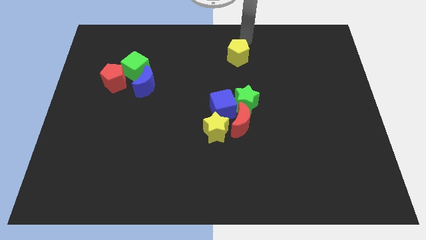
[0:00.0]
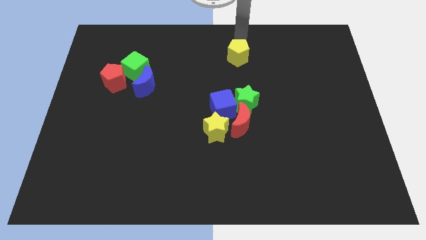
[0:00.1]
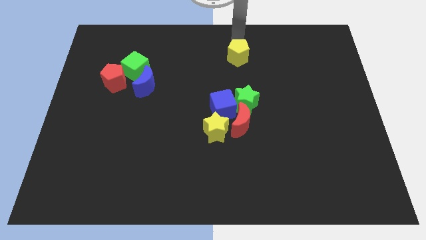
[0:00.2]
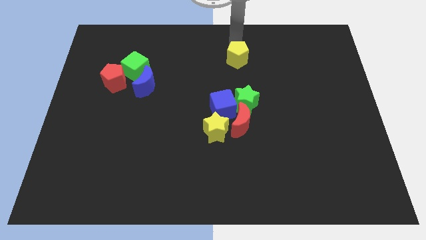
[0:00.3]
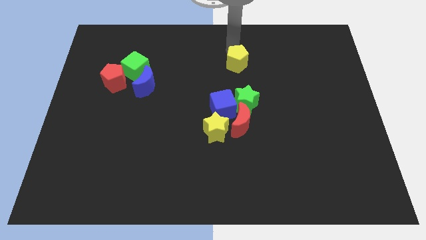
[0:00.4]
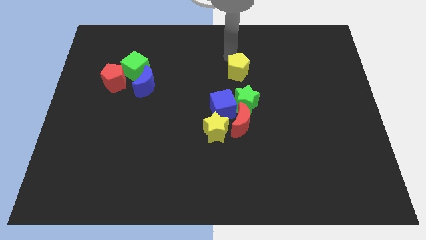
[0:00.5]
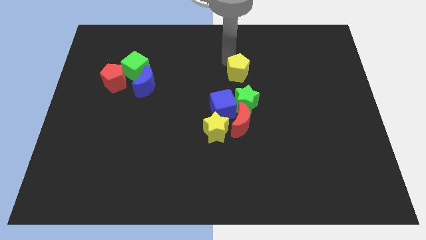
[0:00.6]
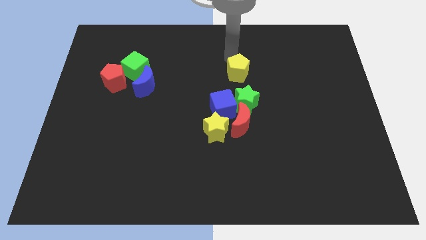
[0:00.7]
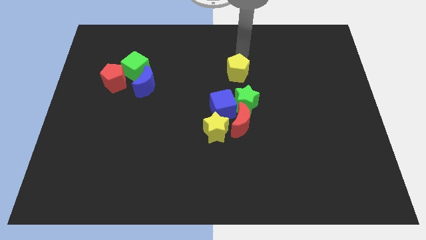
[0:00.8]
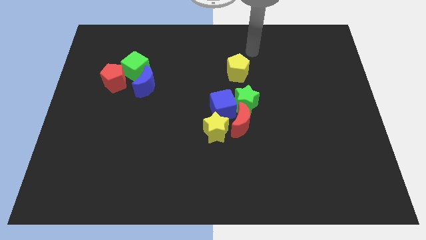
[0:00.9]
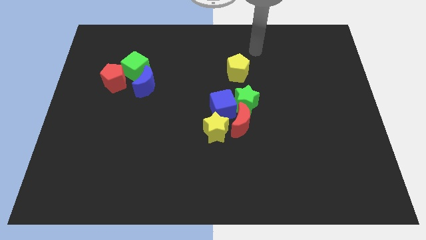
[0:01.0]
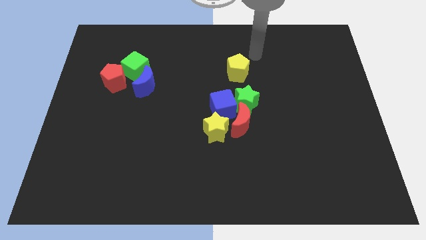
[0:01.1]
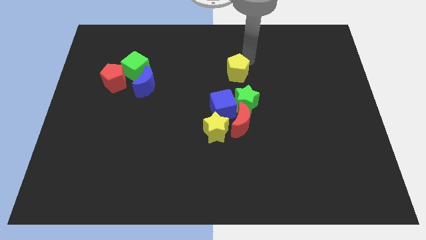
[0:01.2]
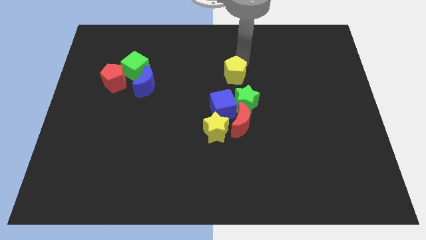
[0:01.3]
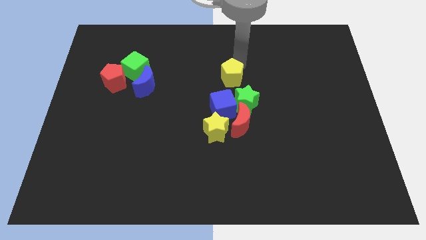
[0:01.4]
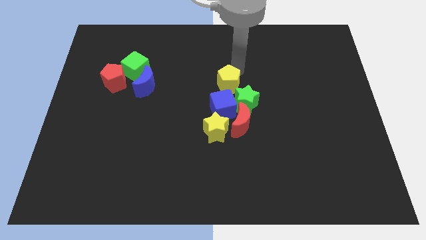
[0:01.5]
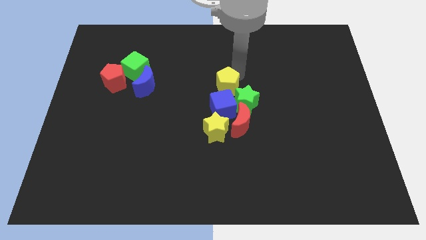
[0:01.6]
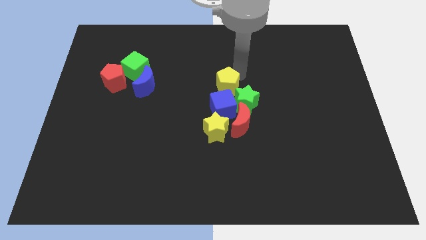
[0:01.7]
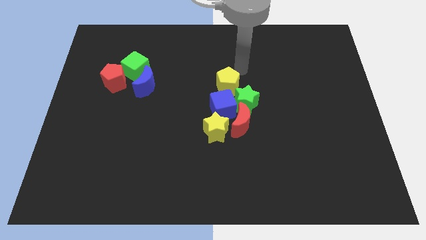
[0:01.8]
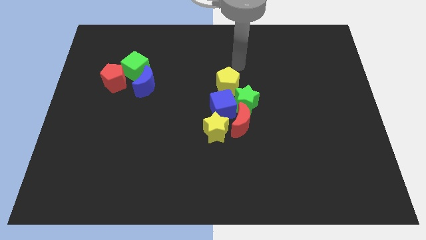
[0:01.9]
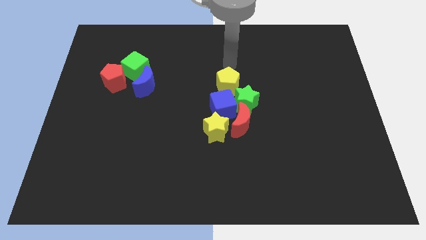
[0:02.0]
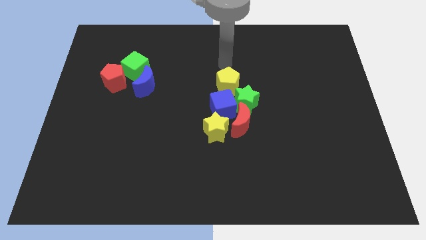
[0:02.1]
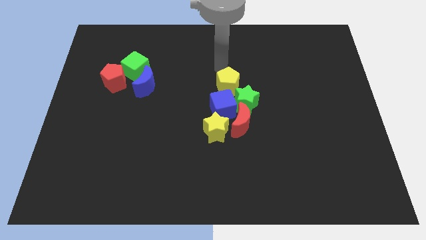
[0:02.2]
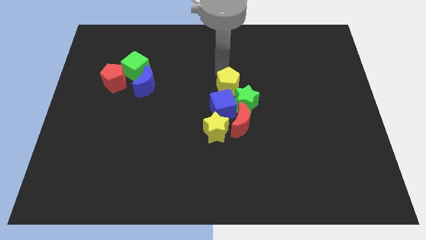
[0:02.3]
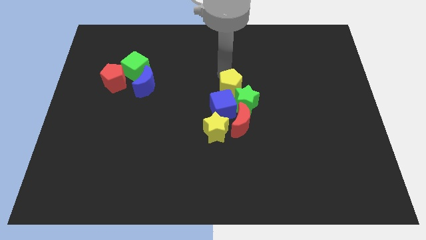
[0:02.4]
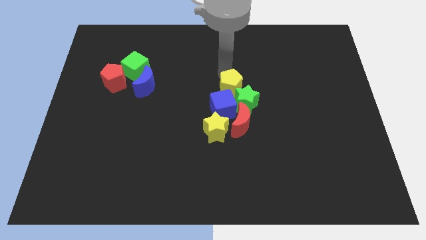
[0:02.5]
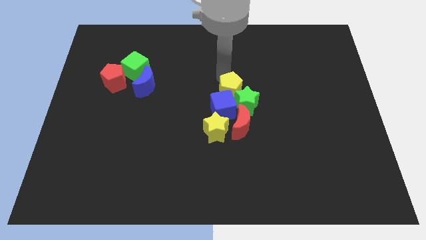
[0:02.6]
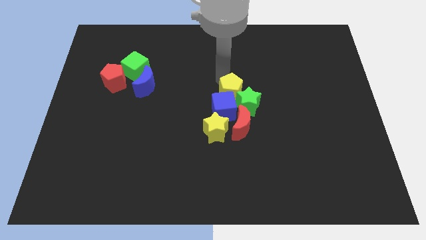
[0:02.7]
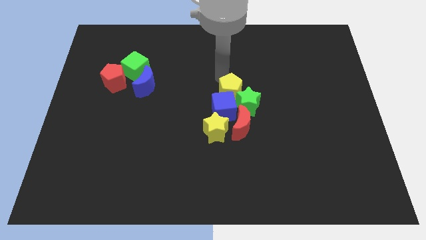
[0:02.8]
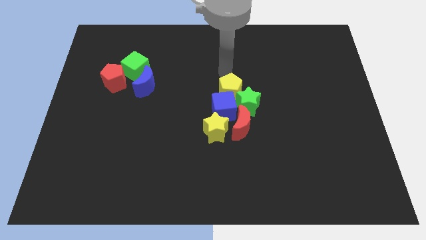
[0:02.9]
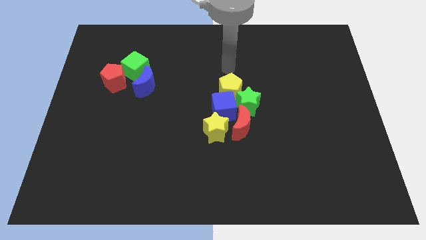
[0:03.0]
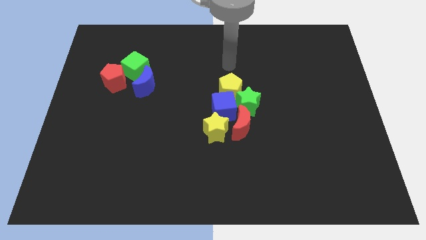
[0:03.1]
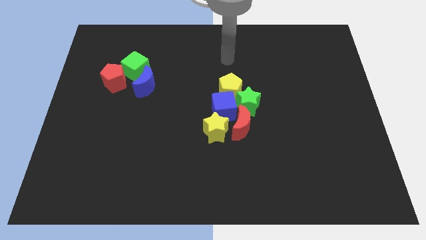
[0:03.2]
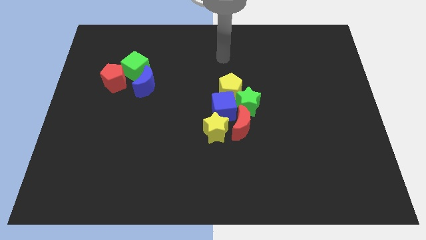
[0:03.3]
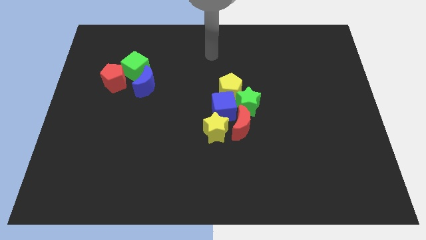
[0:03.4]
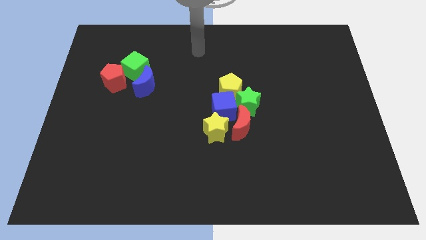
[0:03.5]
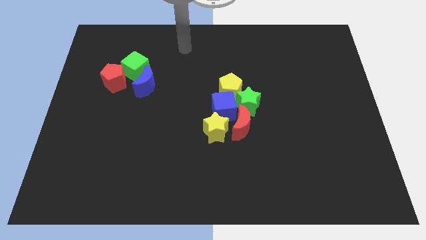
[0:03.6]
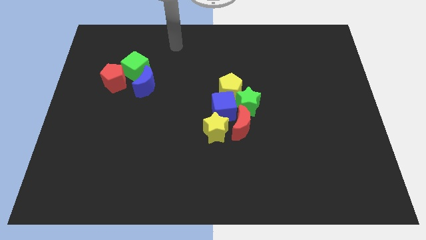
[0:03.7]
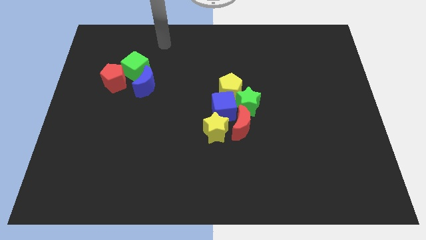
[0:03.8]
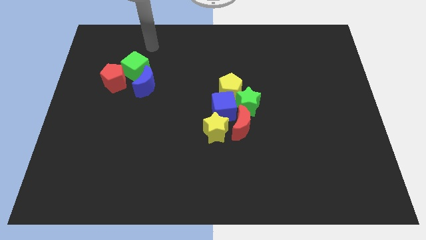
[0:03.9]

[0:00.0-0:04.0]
place yellow pentagon to the top of blue cube

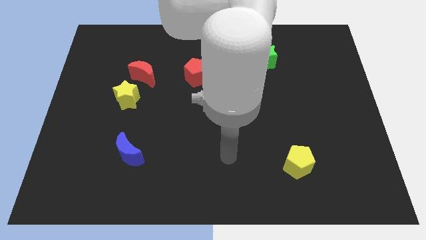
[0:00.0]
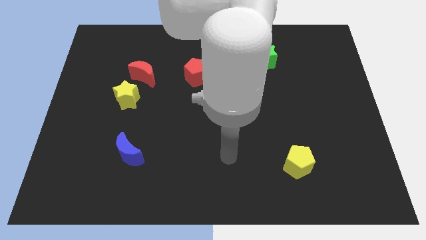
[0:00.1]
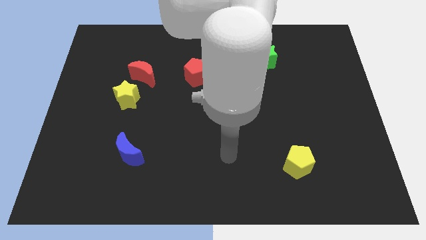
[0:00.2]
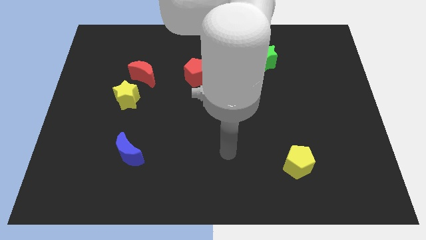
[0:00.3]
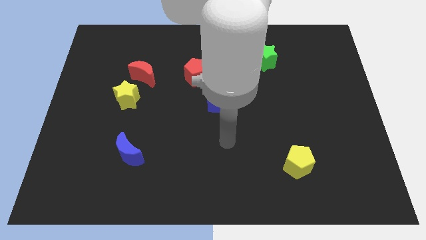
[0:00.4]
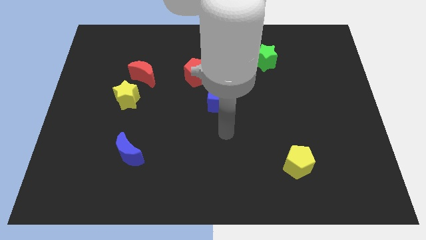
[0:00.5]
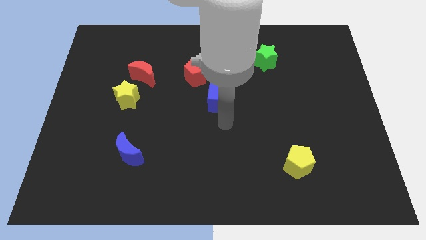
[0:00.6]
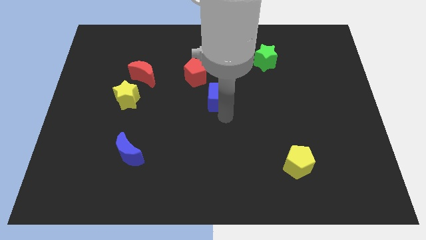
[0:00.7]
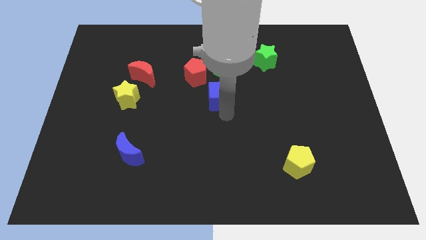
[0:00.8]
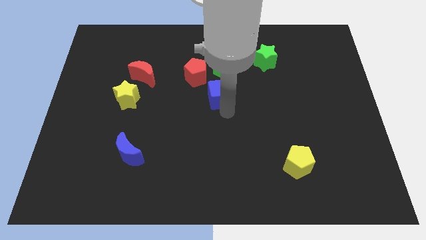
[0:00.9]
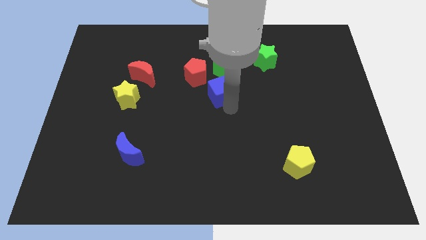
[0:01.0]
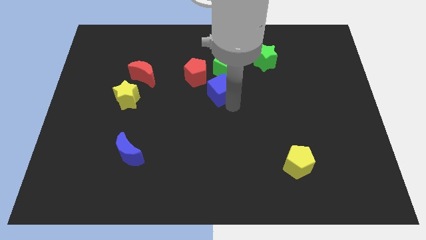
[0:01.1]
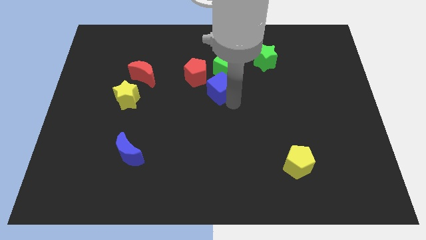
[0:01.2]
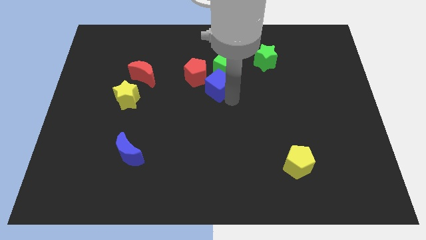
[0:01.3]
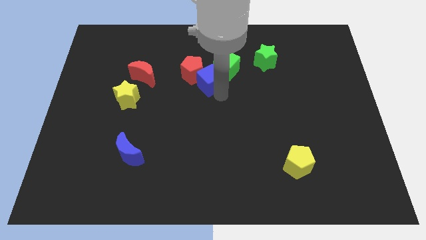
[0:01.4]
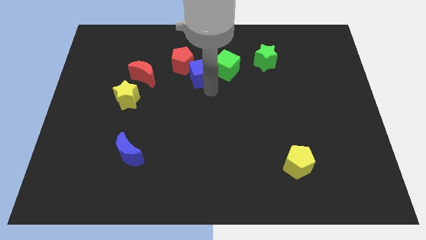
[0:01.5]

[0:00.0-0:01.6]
push the blue cube into the red pentagon

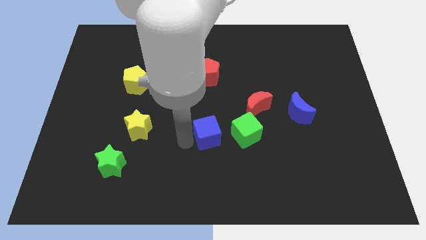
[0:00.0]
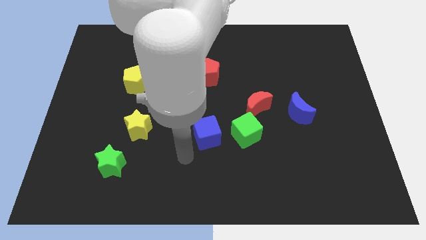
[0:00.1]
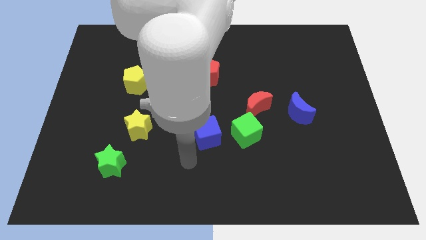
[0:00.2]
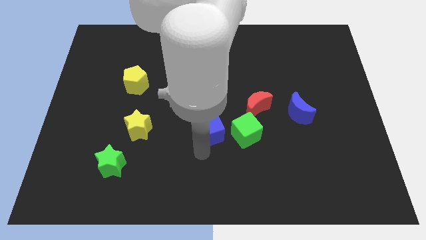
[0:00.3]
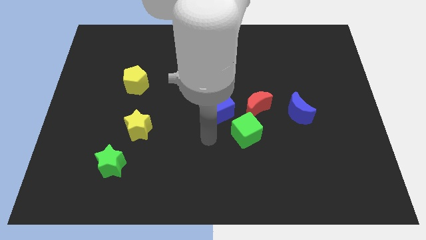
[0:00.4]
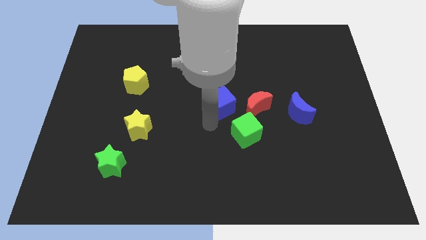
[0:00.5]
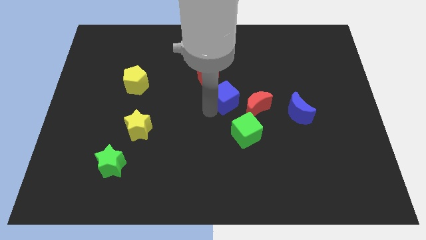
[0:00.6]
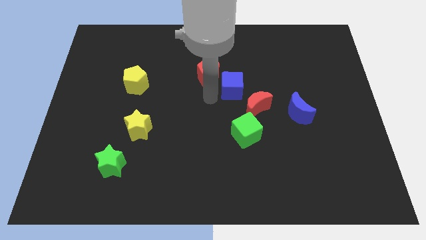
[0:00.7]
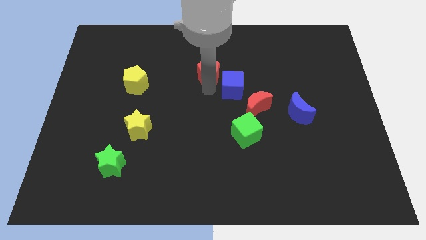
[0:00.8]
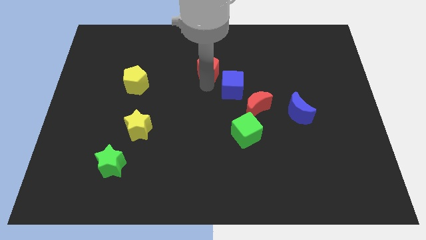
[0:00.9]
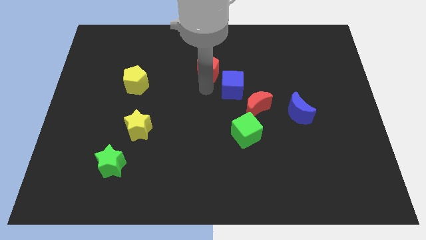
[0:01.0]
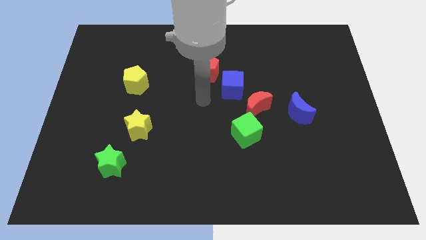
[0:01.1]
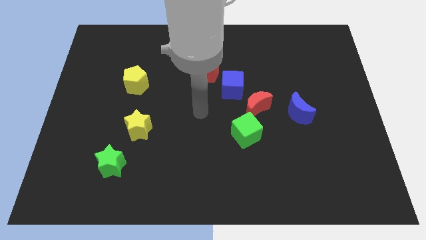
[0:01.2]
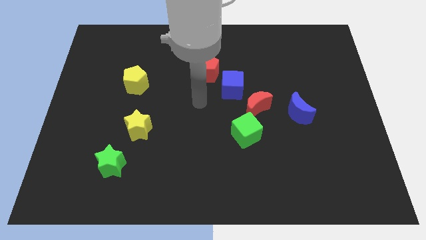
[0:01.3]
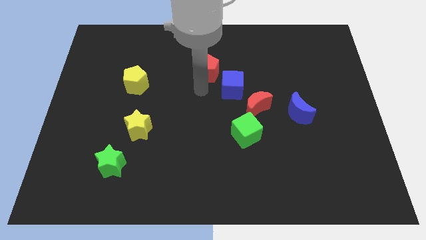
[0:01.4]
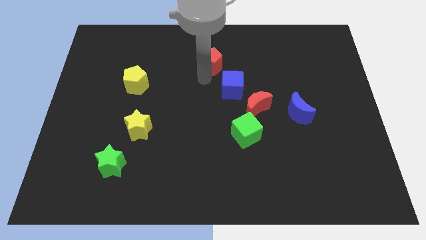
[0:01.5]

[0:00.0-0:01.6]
push the blue cube towards up

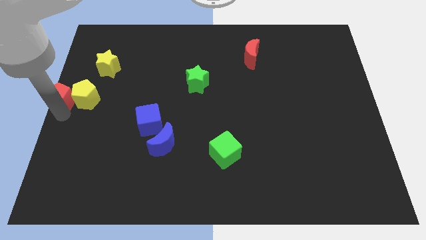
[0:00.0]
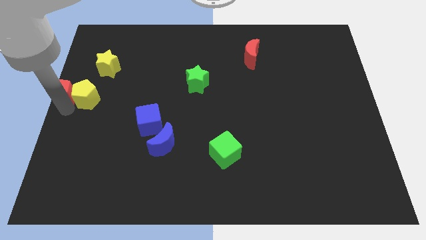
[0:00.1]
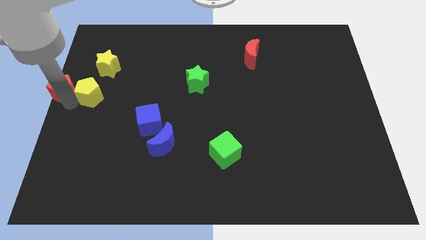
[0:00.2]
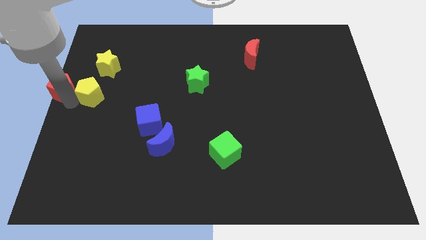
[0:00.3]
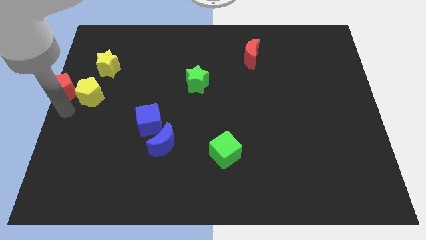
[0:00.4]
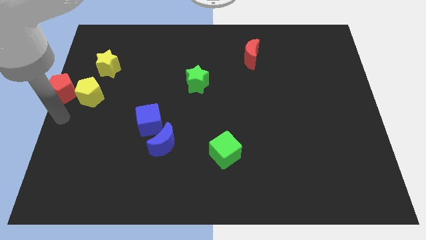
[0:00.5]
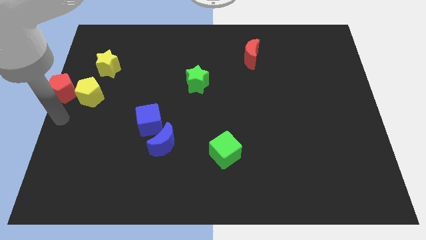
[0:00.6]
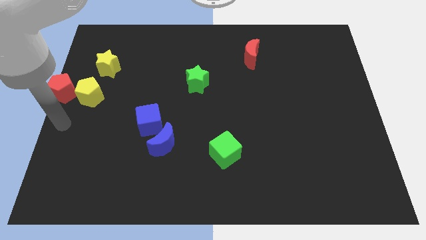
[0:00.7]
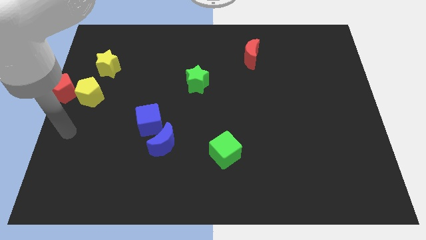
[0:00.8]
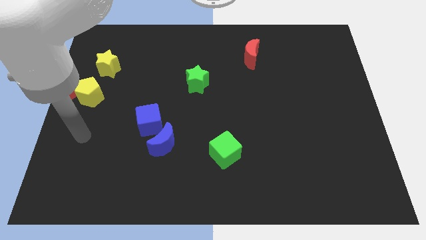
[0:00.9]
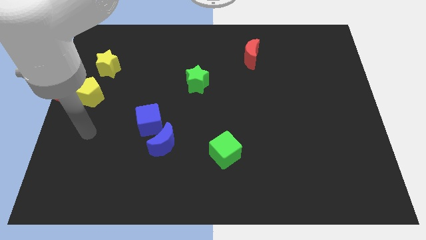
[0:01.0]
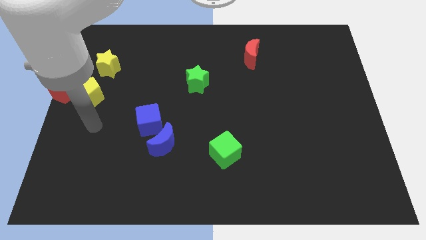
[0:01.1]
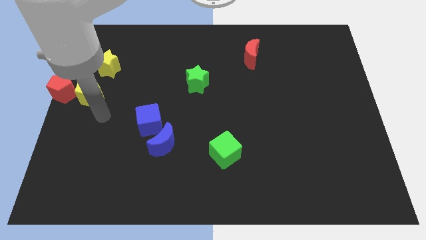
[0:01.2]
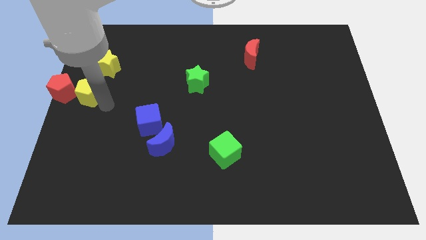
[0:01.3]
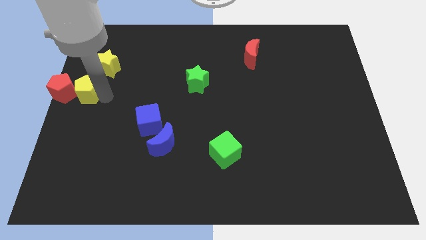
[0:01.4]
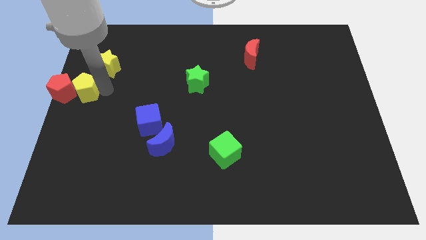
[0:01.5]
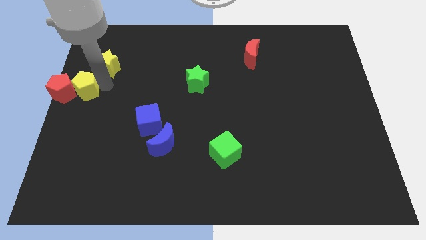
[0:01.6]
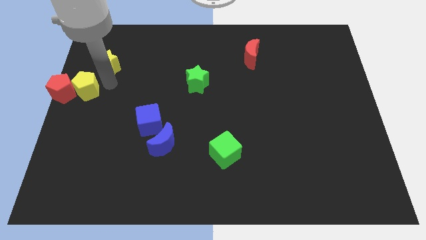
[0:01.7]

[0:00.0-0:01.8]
slide both the pentagons slightly to the top side of the board

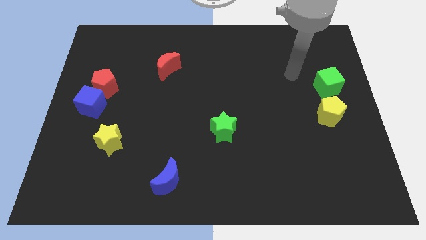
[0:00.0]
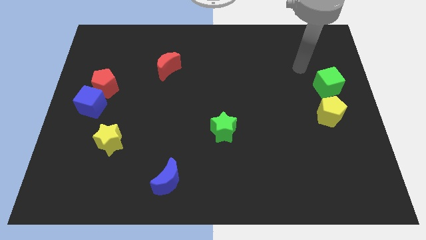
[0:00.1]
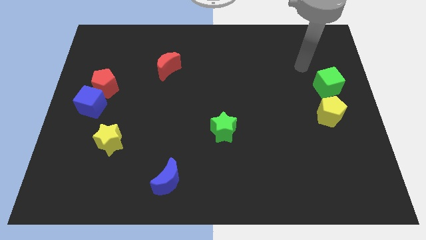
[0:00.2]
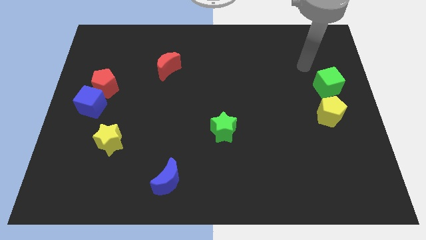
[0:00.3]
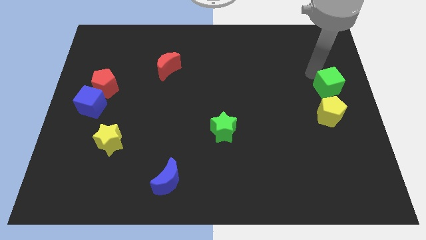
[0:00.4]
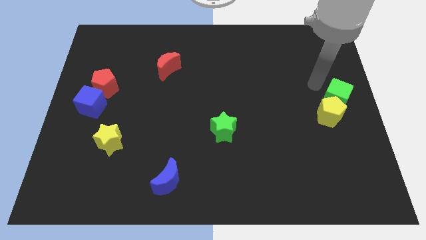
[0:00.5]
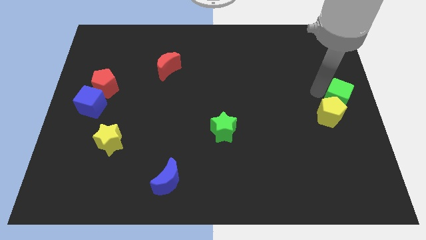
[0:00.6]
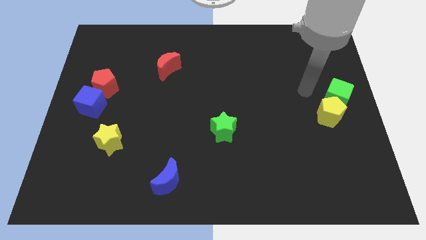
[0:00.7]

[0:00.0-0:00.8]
push the green cube into the yellow pentagon
